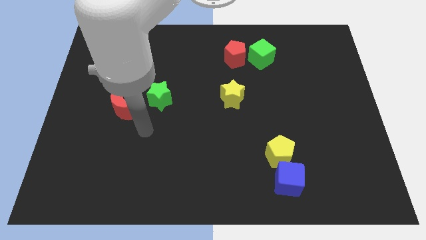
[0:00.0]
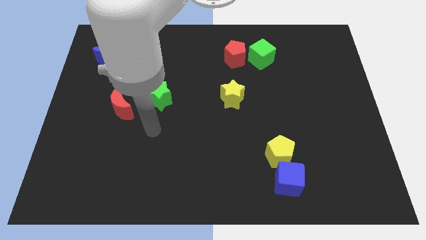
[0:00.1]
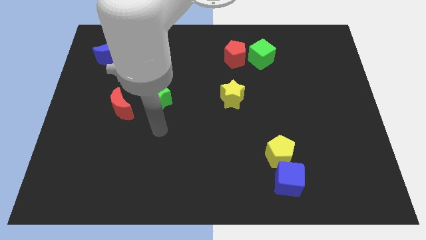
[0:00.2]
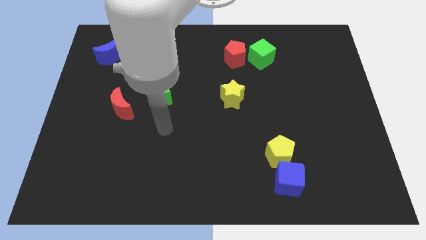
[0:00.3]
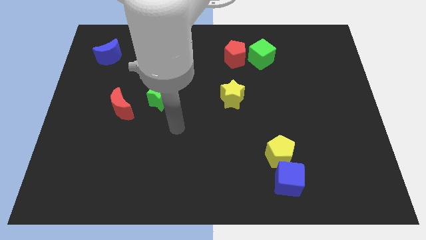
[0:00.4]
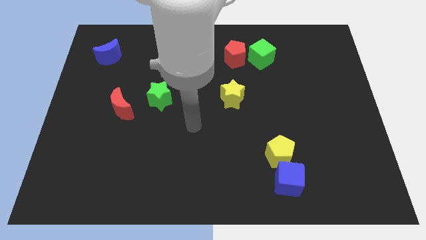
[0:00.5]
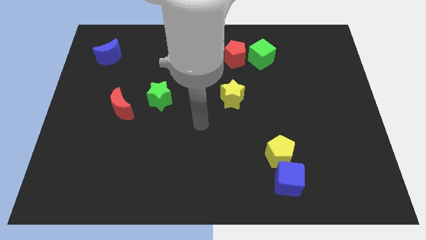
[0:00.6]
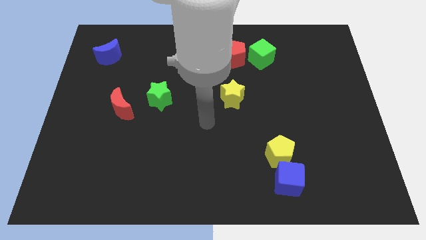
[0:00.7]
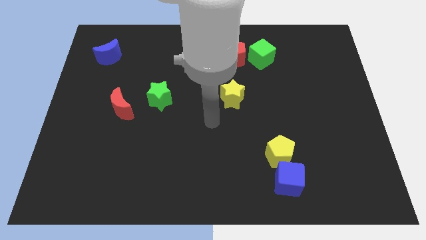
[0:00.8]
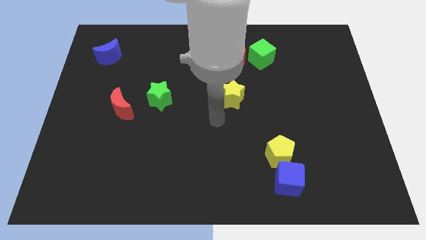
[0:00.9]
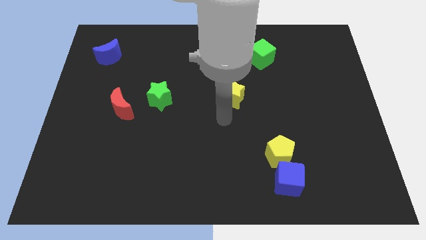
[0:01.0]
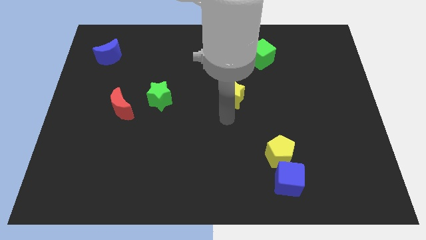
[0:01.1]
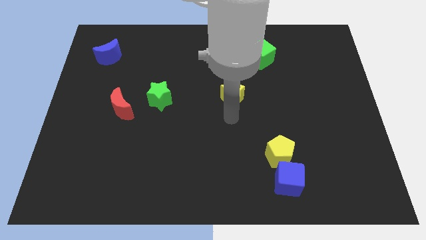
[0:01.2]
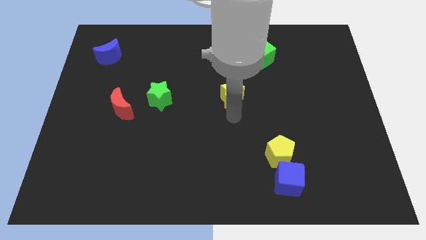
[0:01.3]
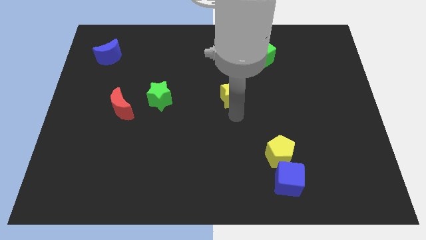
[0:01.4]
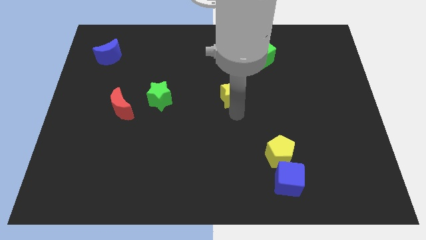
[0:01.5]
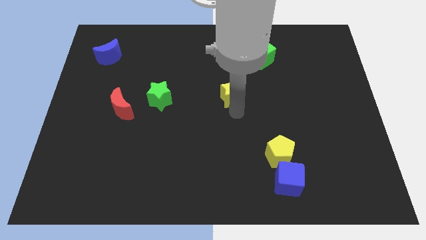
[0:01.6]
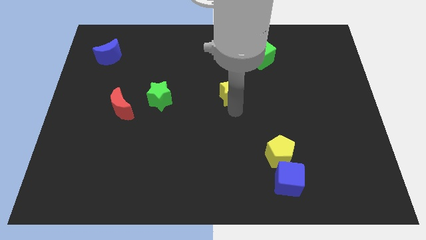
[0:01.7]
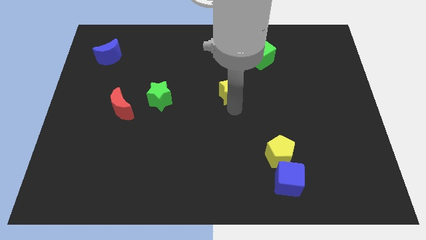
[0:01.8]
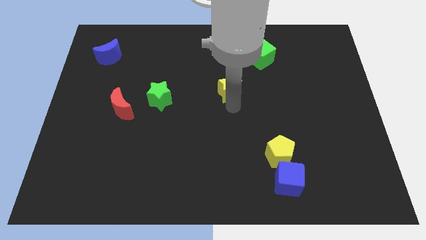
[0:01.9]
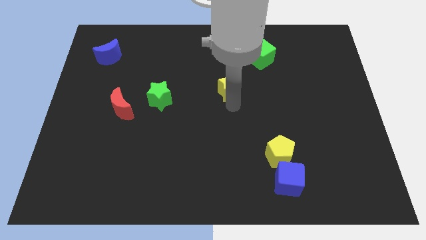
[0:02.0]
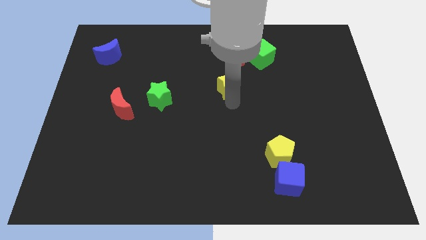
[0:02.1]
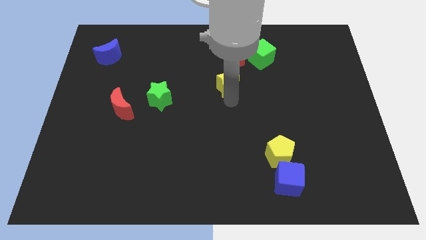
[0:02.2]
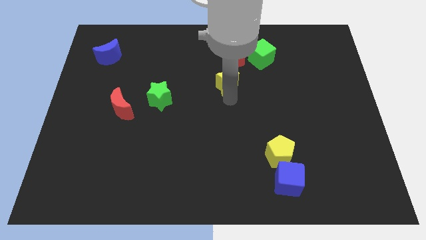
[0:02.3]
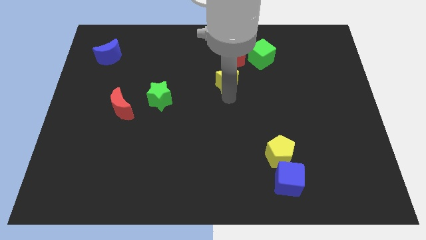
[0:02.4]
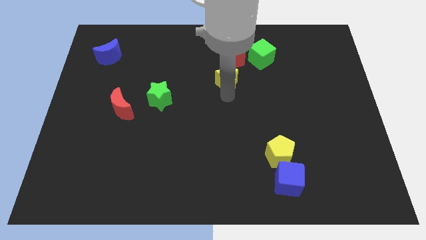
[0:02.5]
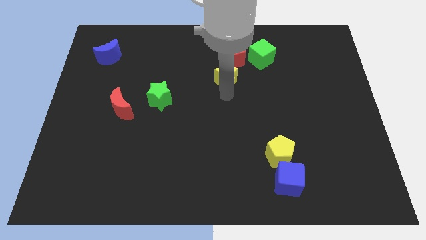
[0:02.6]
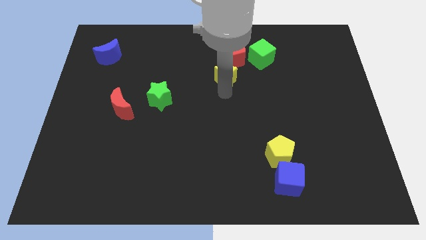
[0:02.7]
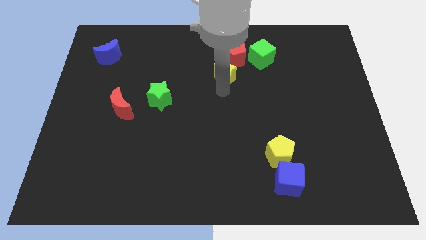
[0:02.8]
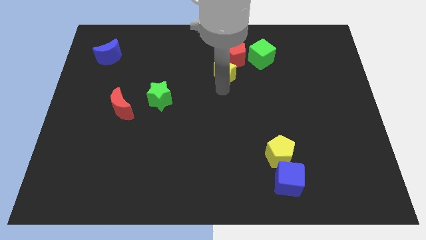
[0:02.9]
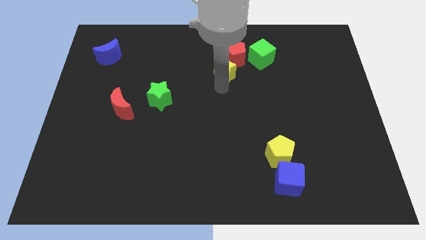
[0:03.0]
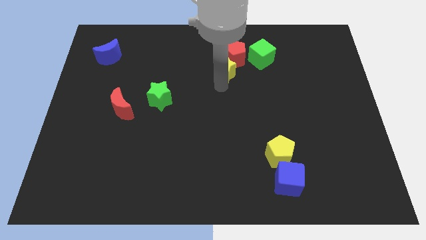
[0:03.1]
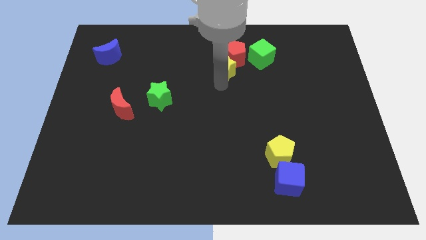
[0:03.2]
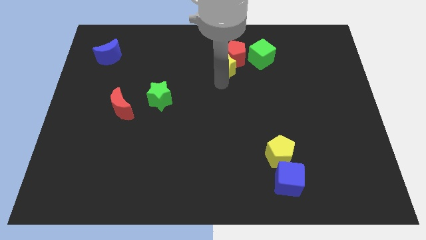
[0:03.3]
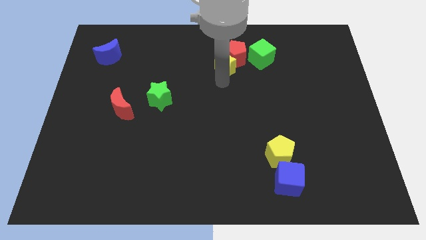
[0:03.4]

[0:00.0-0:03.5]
slide the yellow star towards the red pentagon

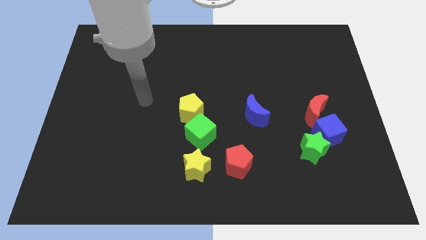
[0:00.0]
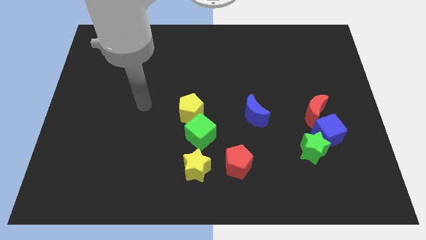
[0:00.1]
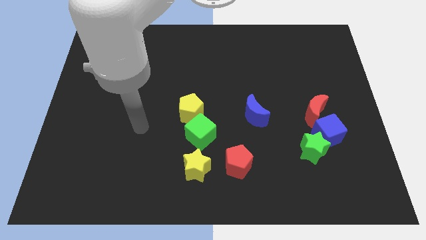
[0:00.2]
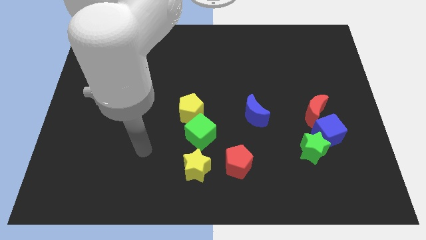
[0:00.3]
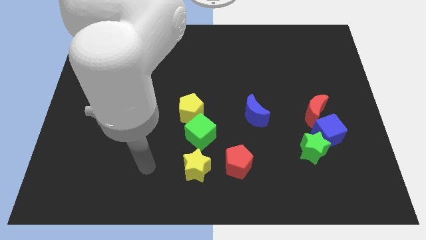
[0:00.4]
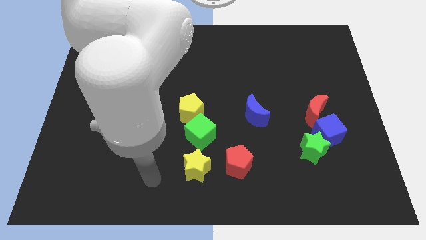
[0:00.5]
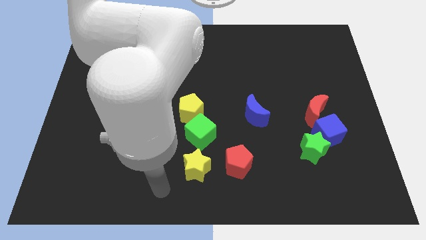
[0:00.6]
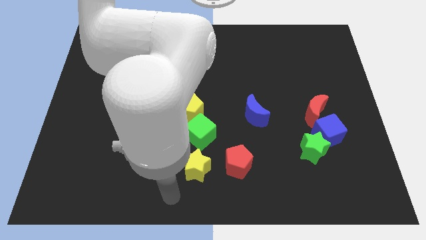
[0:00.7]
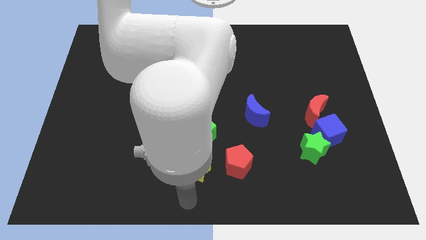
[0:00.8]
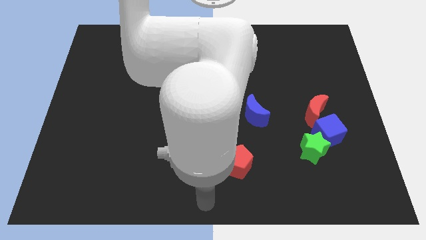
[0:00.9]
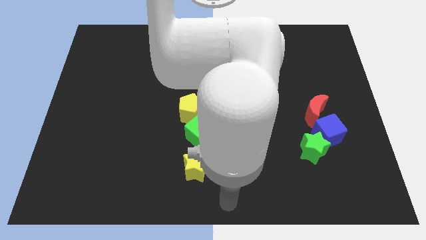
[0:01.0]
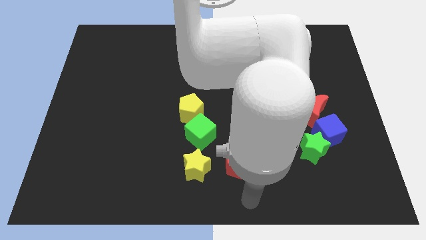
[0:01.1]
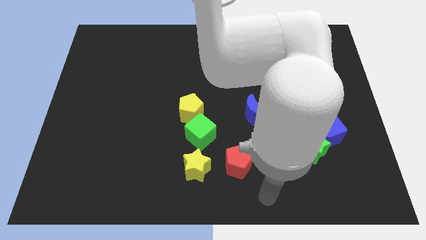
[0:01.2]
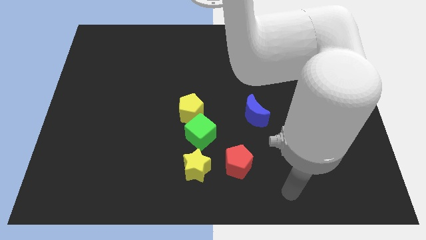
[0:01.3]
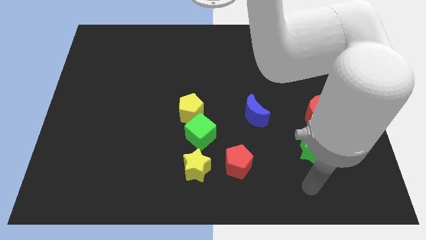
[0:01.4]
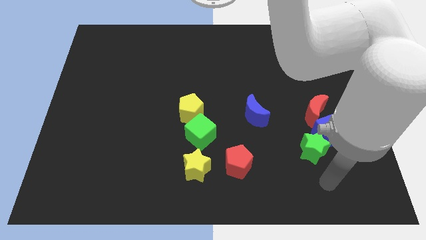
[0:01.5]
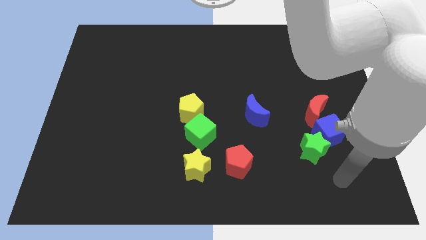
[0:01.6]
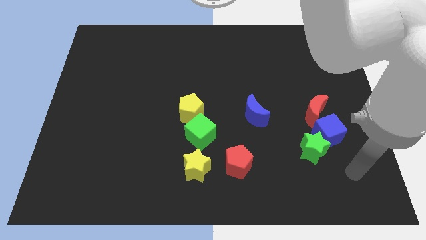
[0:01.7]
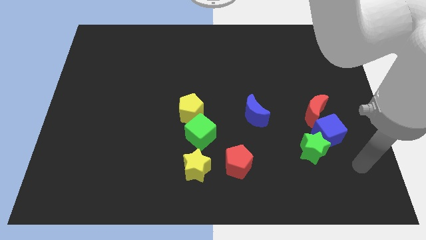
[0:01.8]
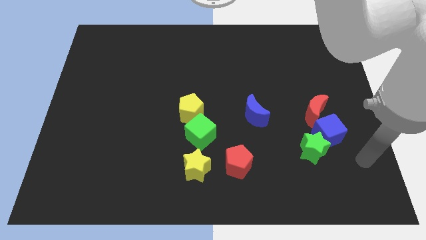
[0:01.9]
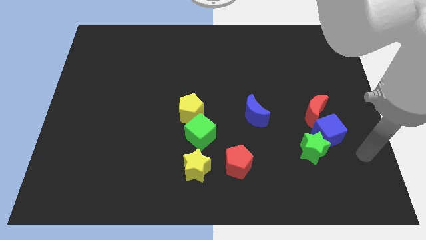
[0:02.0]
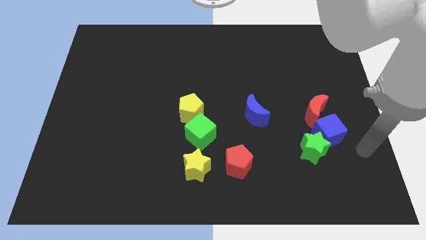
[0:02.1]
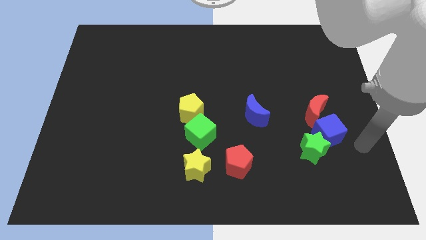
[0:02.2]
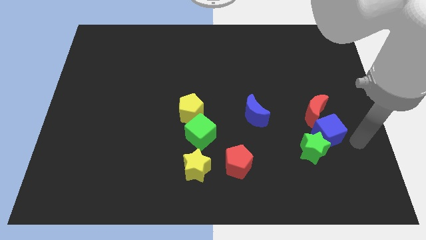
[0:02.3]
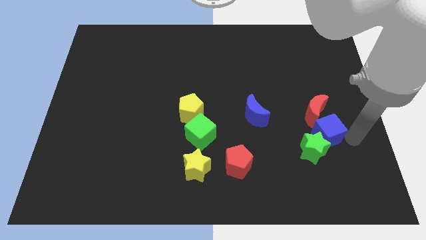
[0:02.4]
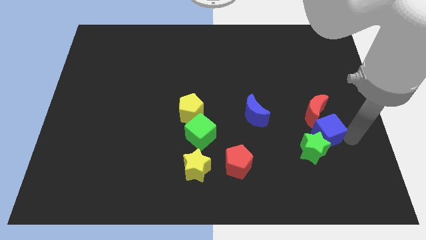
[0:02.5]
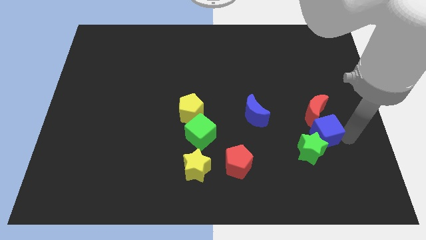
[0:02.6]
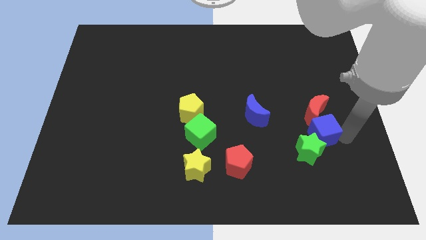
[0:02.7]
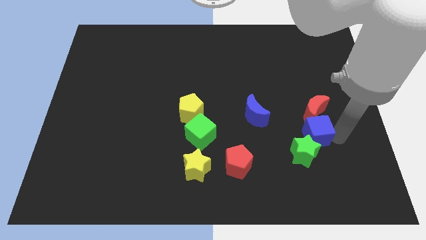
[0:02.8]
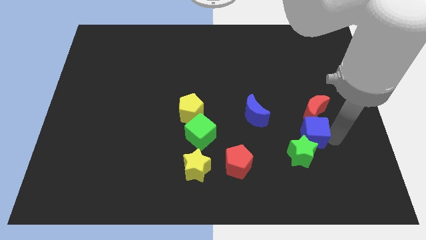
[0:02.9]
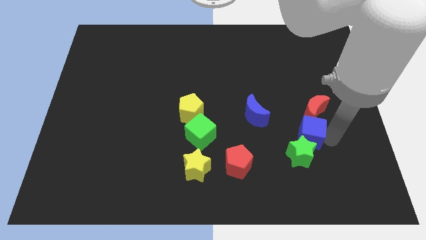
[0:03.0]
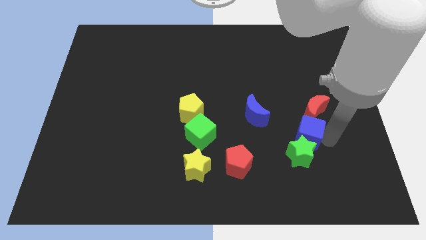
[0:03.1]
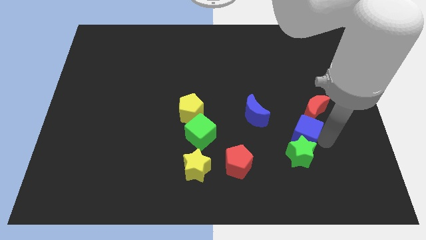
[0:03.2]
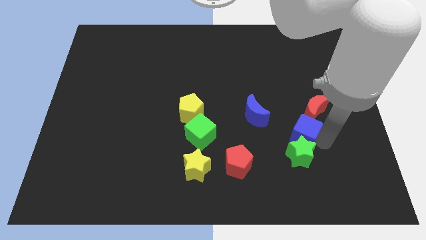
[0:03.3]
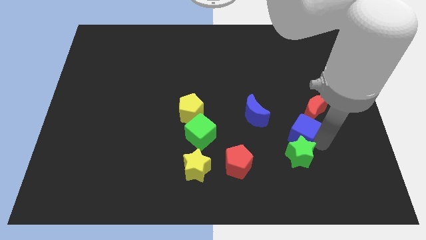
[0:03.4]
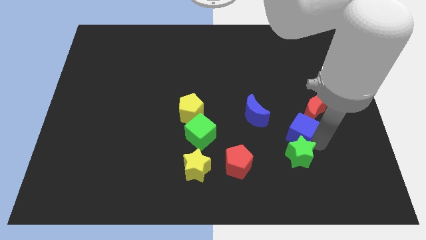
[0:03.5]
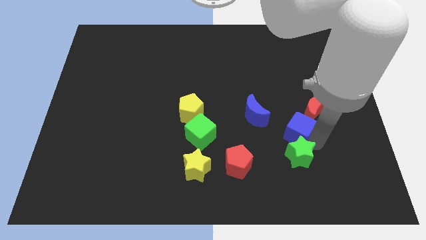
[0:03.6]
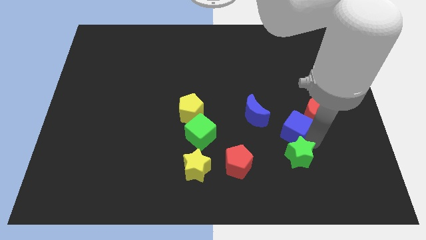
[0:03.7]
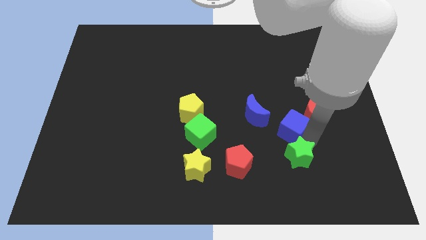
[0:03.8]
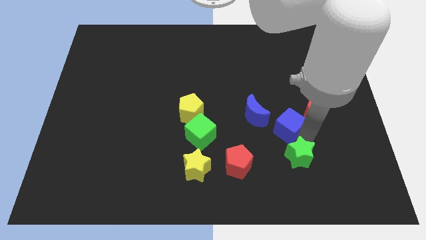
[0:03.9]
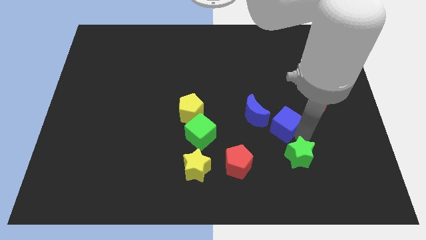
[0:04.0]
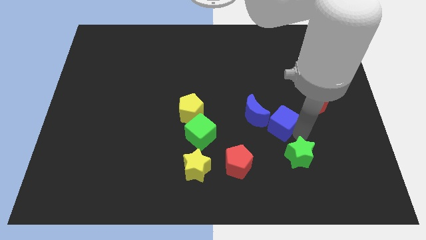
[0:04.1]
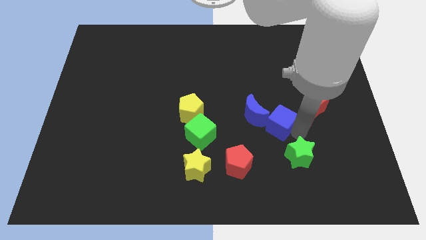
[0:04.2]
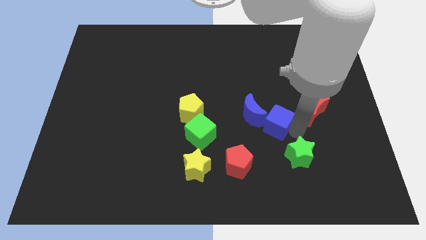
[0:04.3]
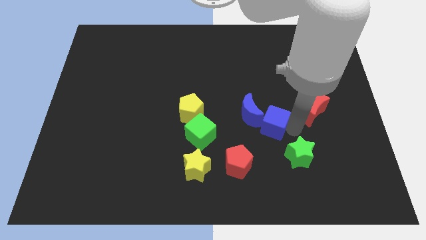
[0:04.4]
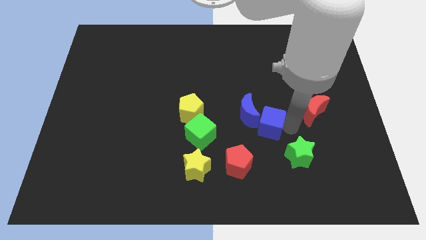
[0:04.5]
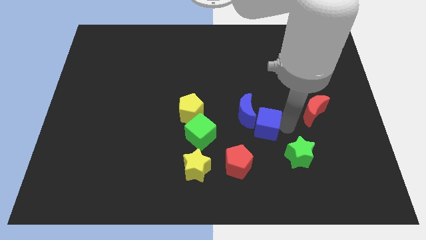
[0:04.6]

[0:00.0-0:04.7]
push the blue cube close to the blue moon
